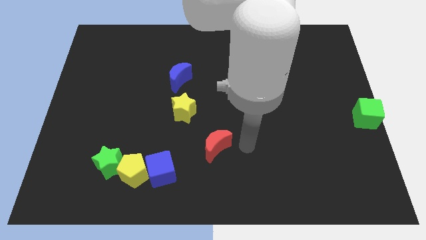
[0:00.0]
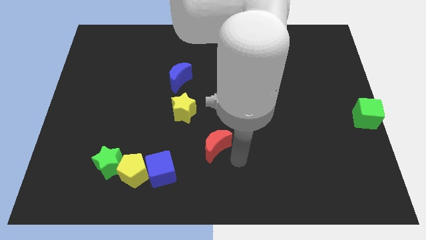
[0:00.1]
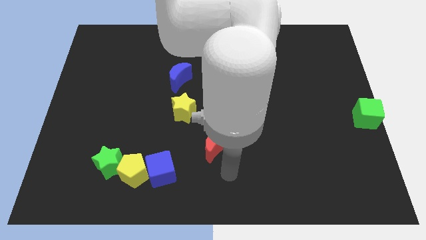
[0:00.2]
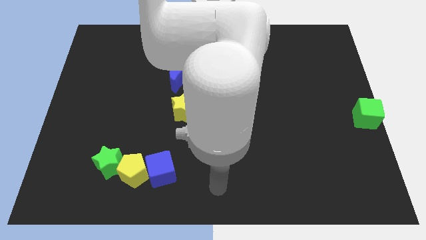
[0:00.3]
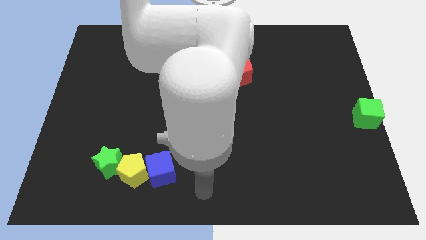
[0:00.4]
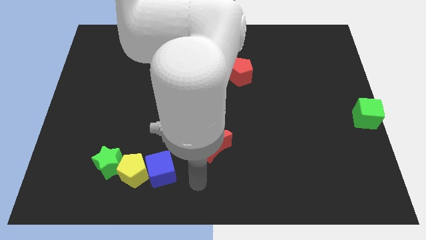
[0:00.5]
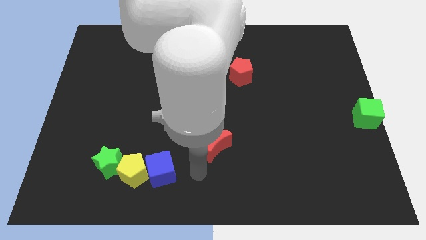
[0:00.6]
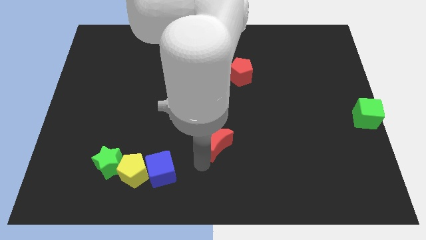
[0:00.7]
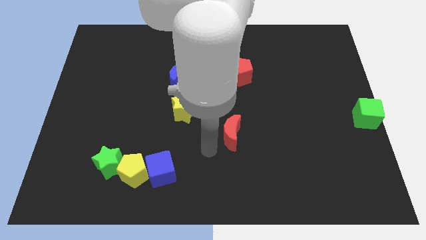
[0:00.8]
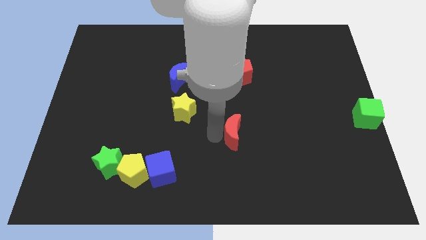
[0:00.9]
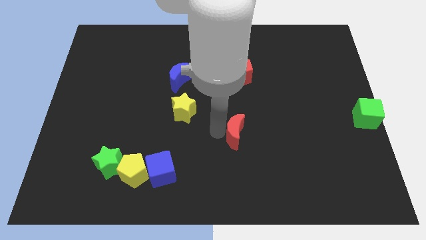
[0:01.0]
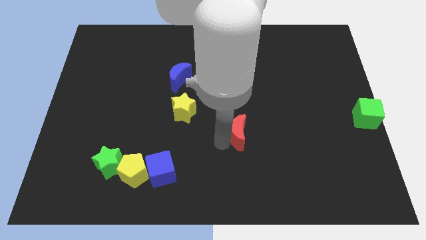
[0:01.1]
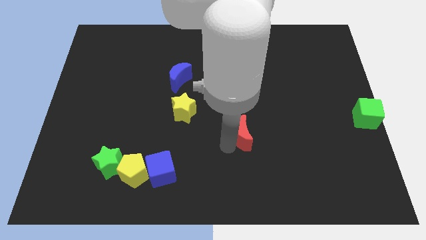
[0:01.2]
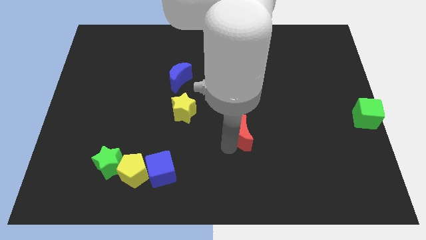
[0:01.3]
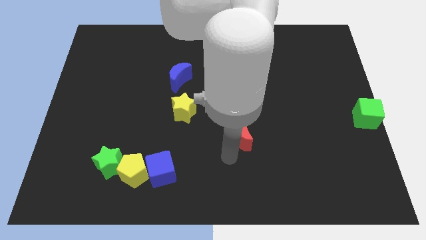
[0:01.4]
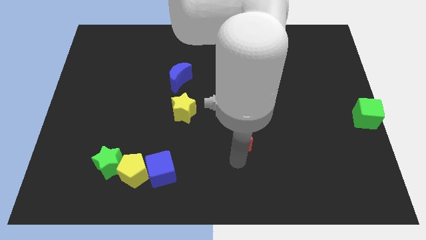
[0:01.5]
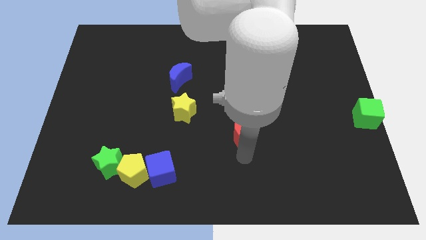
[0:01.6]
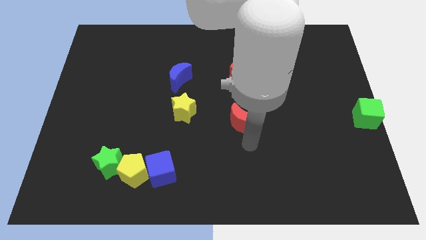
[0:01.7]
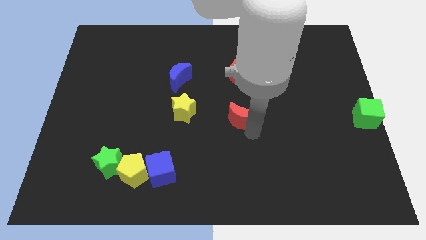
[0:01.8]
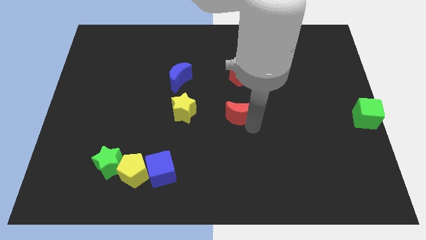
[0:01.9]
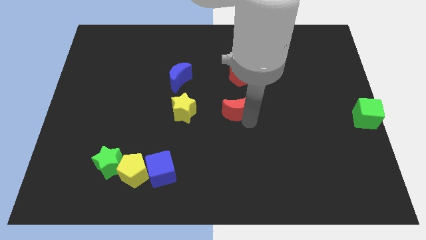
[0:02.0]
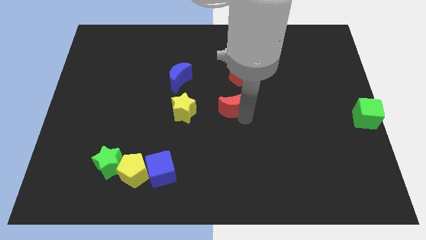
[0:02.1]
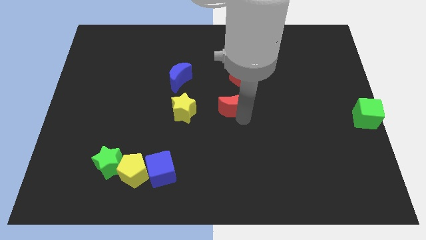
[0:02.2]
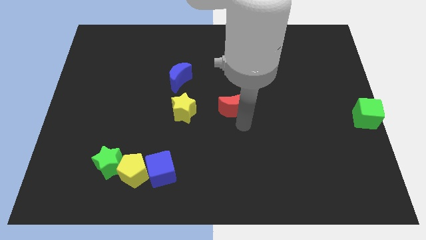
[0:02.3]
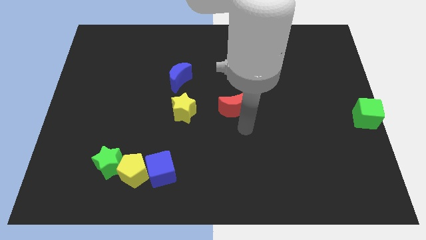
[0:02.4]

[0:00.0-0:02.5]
place the red crescent to the right of the yellow star

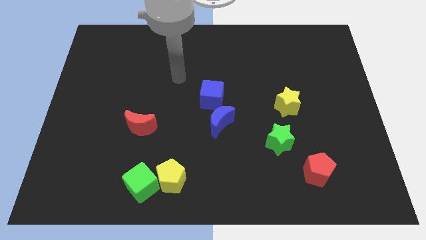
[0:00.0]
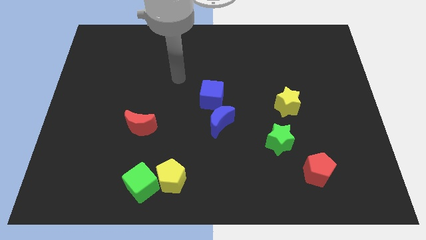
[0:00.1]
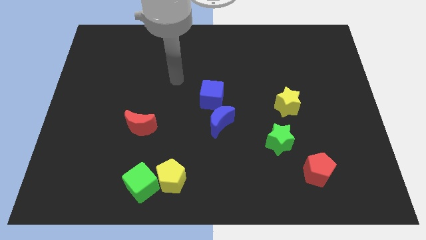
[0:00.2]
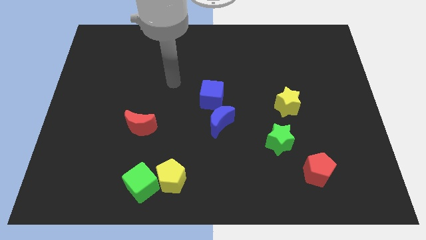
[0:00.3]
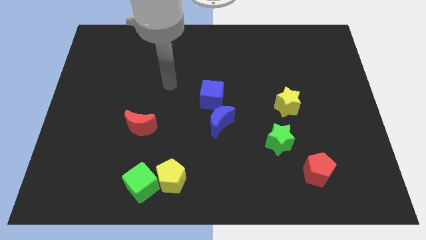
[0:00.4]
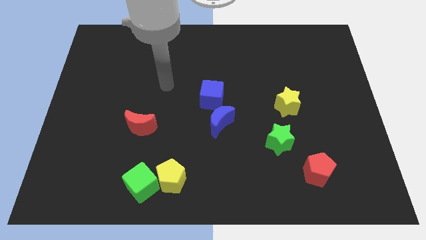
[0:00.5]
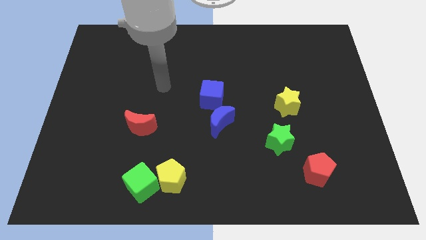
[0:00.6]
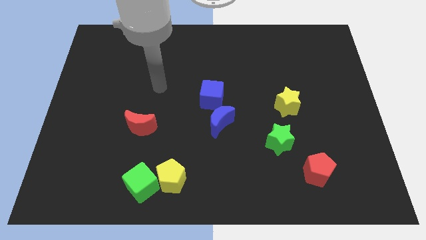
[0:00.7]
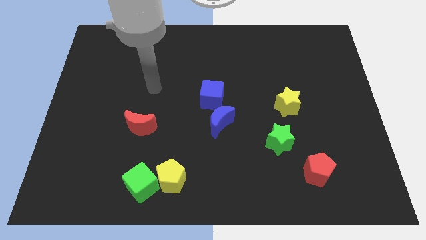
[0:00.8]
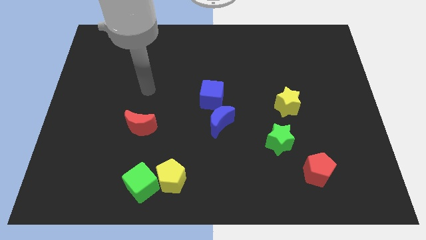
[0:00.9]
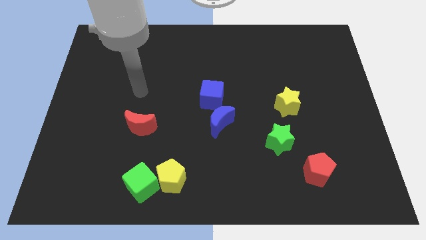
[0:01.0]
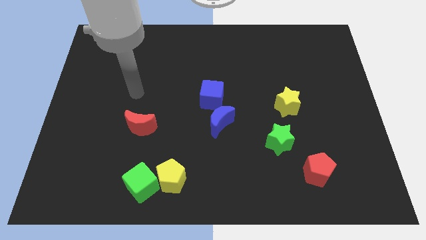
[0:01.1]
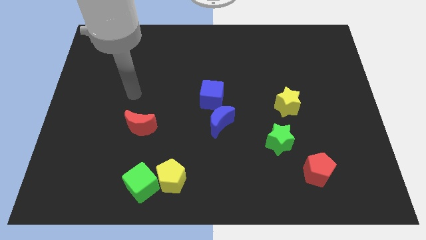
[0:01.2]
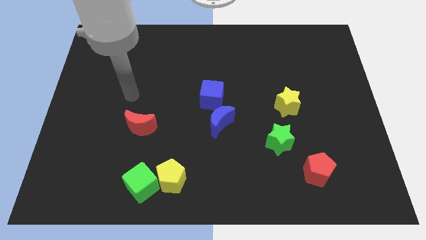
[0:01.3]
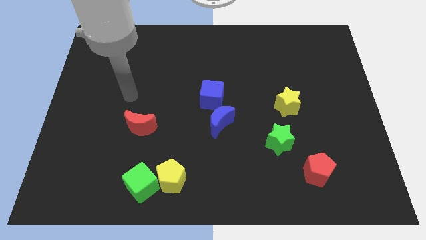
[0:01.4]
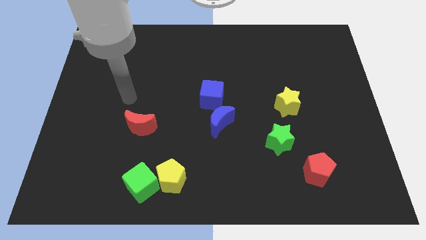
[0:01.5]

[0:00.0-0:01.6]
point your arm at the top of the red crescent

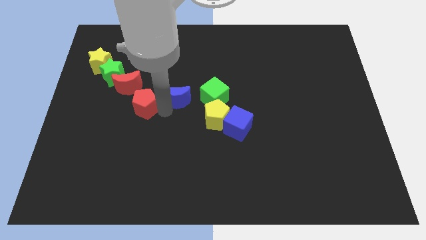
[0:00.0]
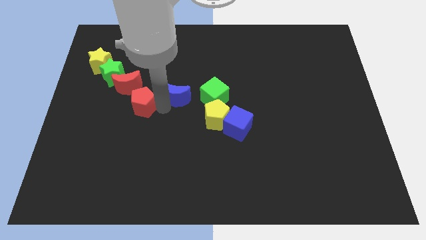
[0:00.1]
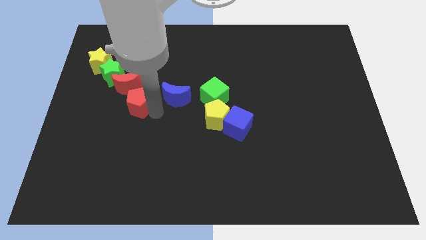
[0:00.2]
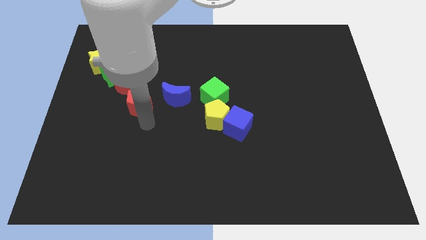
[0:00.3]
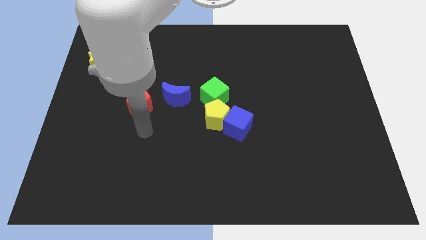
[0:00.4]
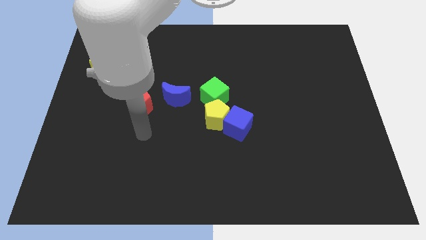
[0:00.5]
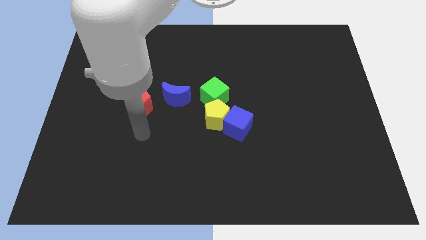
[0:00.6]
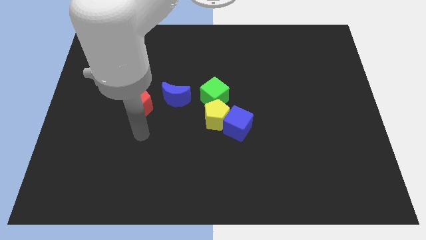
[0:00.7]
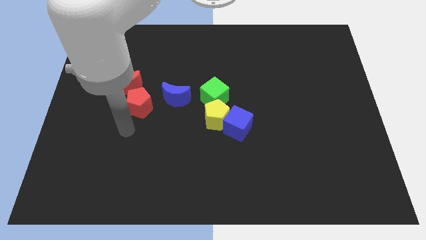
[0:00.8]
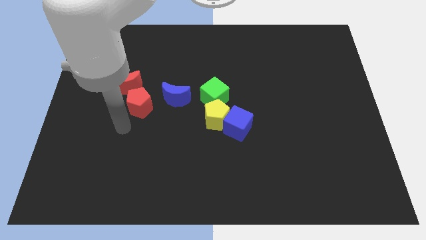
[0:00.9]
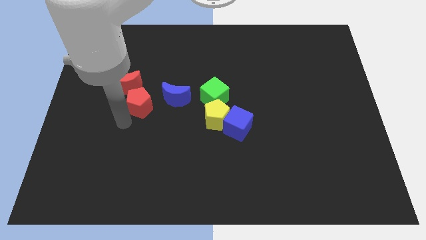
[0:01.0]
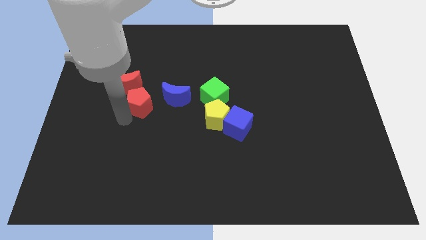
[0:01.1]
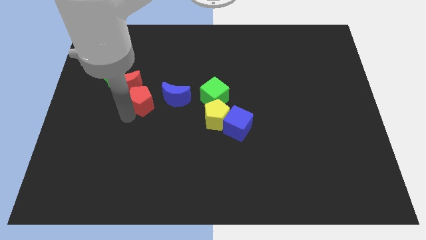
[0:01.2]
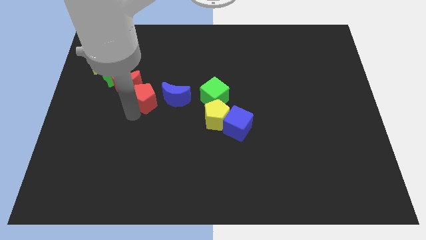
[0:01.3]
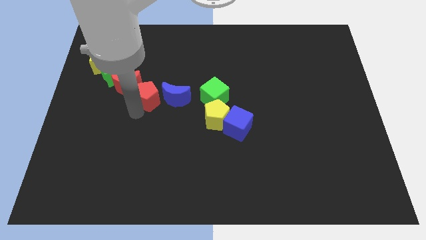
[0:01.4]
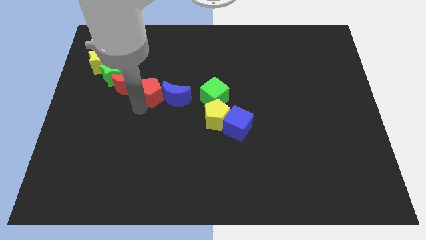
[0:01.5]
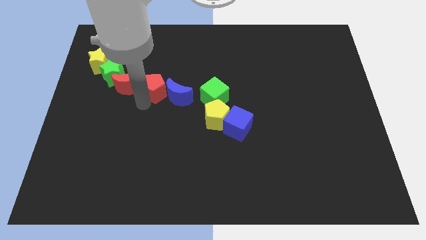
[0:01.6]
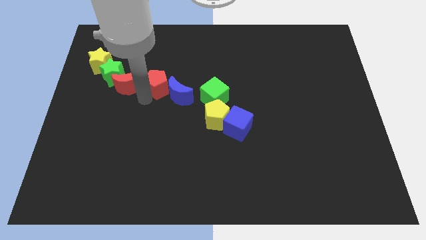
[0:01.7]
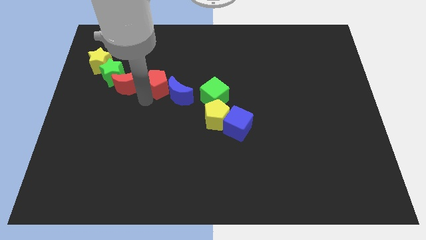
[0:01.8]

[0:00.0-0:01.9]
place red pentagon between red moon and blue moon

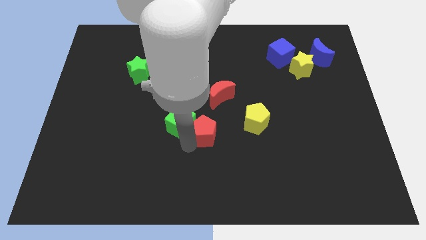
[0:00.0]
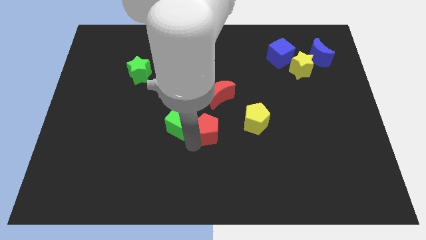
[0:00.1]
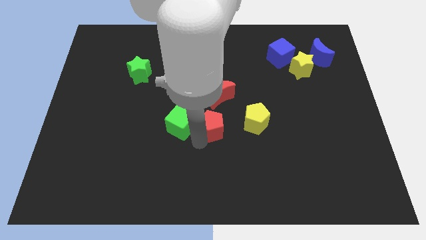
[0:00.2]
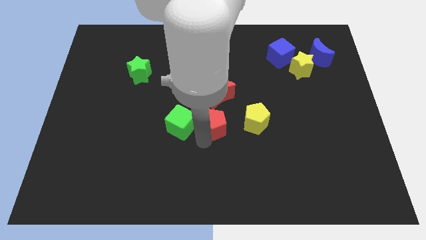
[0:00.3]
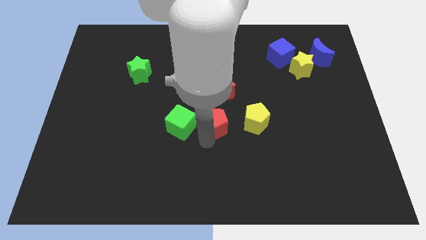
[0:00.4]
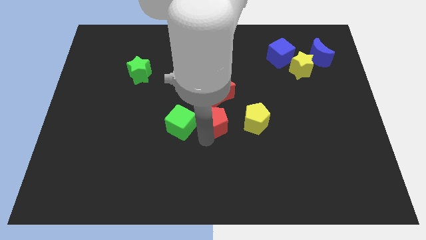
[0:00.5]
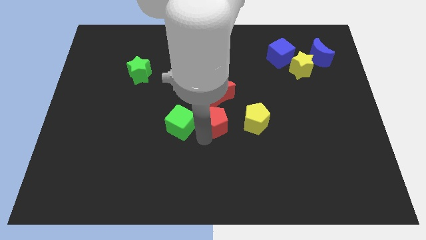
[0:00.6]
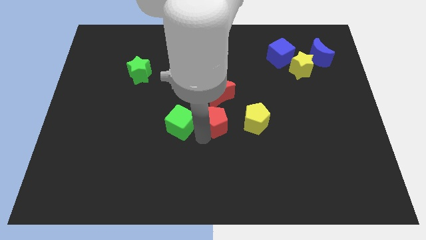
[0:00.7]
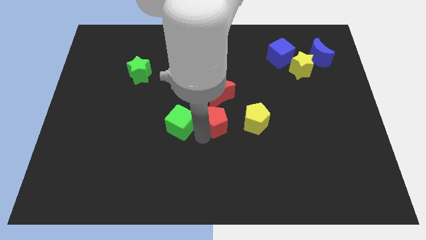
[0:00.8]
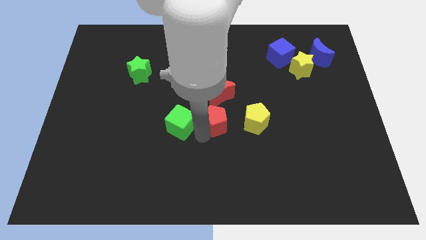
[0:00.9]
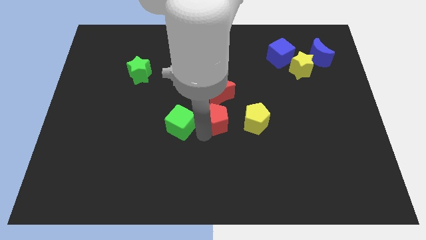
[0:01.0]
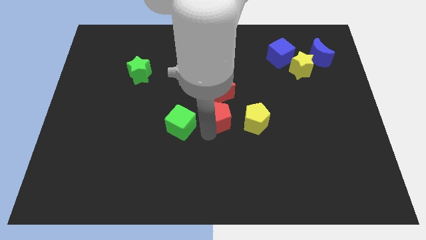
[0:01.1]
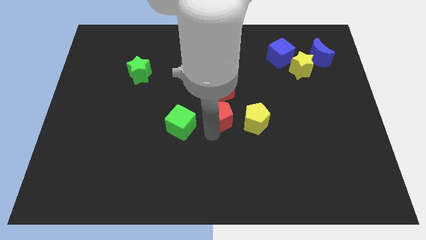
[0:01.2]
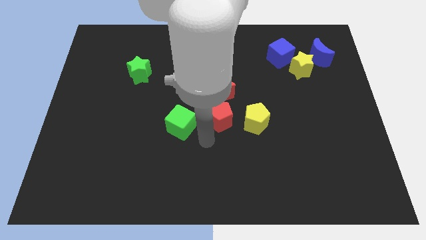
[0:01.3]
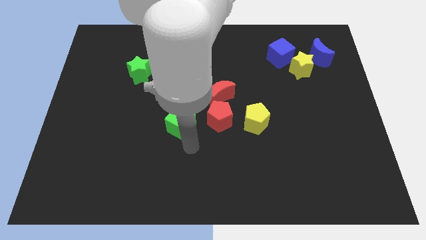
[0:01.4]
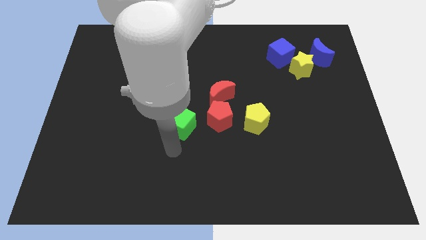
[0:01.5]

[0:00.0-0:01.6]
slightly move the red pentagon up

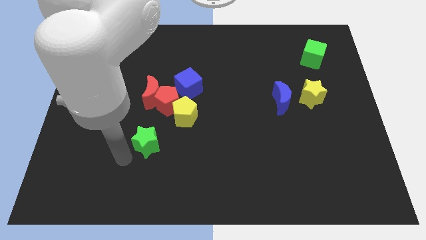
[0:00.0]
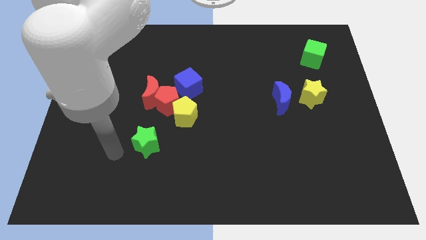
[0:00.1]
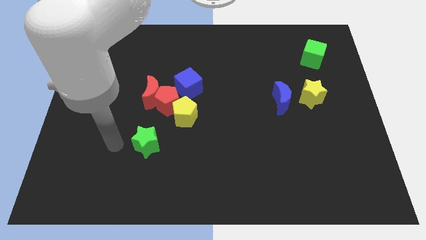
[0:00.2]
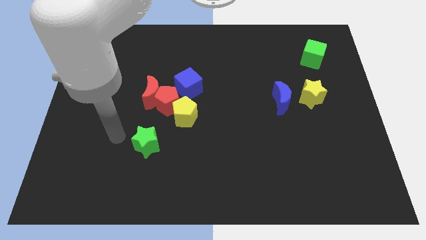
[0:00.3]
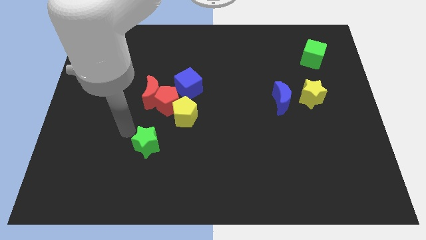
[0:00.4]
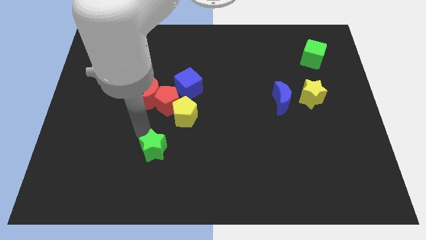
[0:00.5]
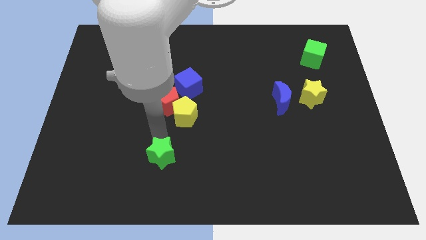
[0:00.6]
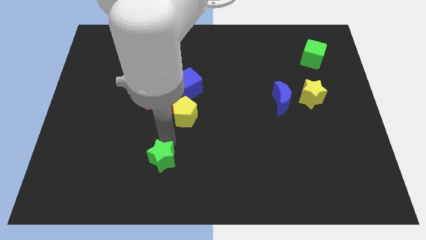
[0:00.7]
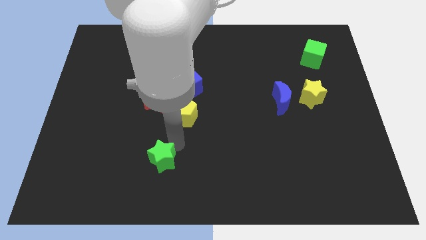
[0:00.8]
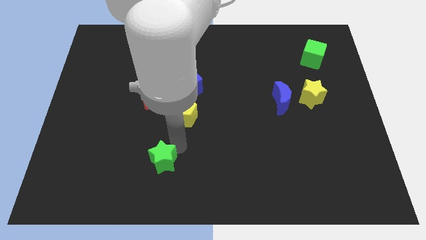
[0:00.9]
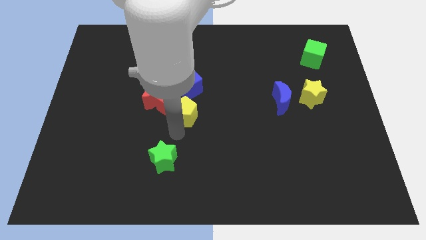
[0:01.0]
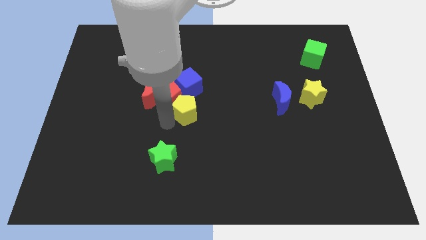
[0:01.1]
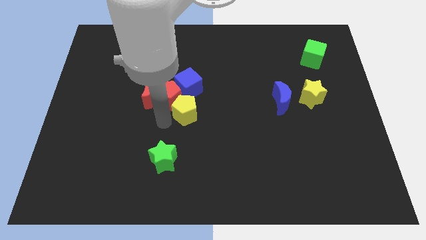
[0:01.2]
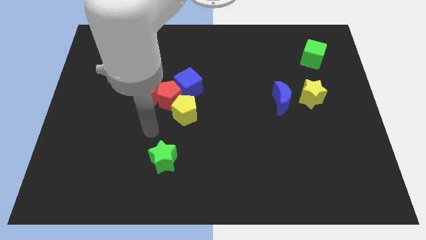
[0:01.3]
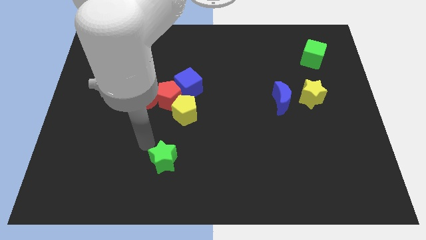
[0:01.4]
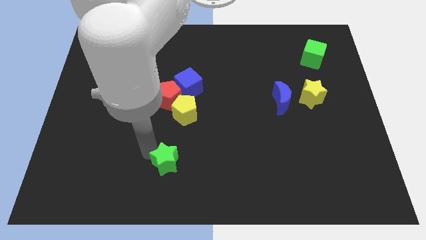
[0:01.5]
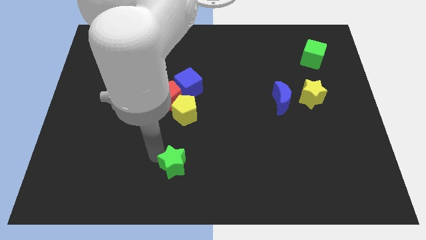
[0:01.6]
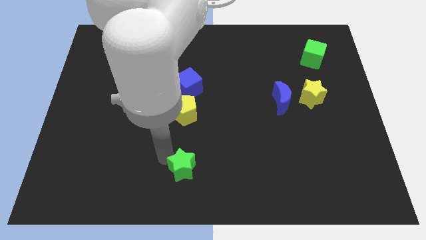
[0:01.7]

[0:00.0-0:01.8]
push the green star below yellow pentagon
